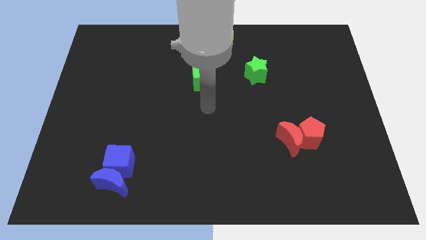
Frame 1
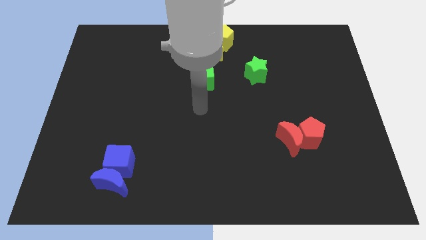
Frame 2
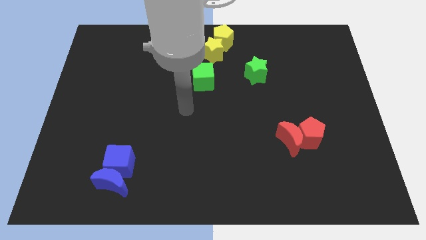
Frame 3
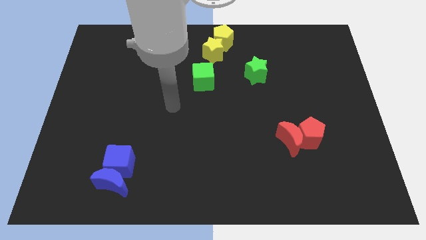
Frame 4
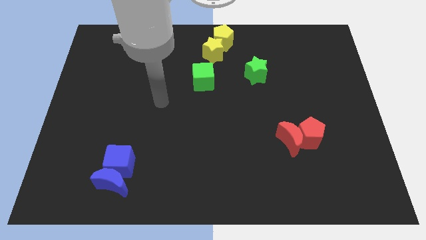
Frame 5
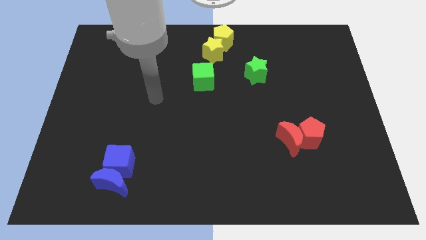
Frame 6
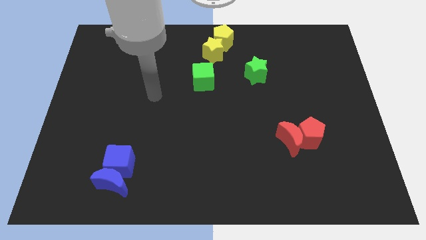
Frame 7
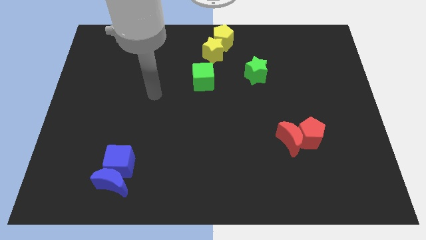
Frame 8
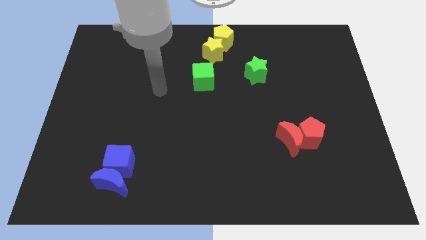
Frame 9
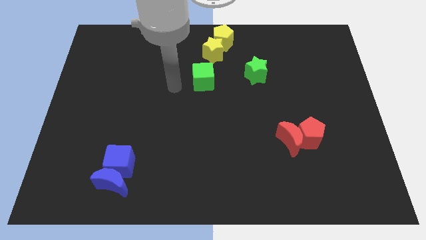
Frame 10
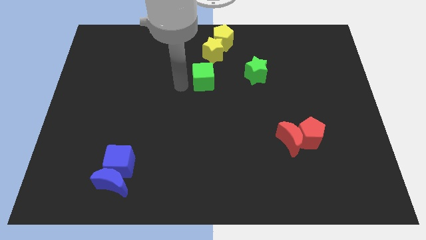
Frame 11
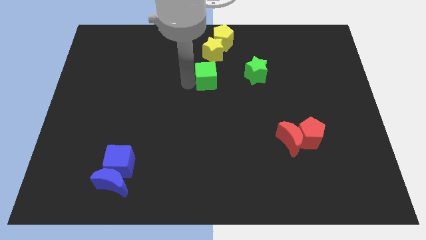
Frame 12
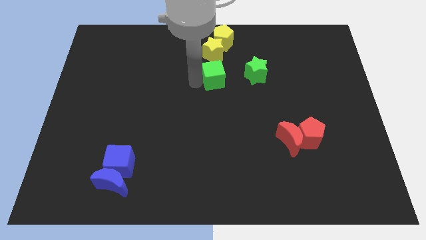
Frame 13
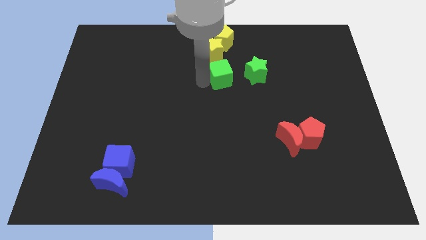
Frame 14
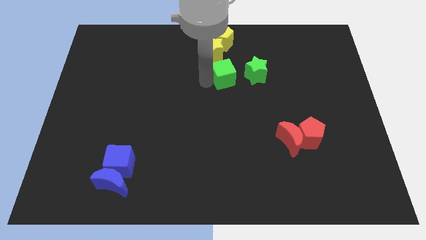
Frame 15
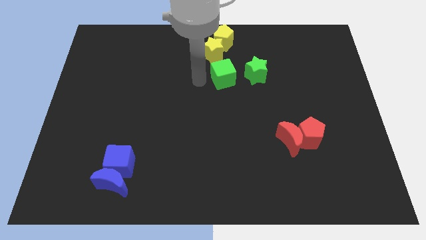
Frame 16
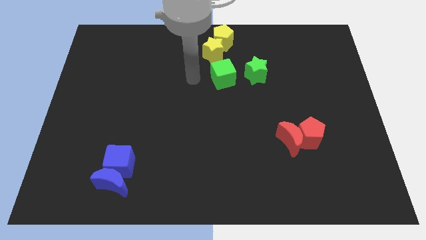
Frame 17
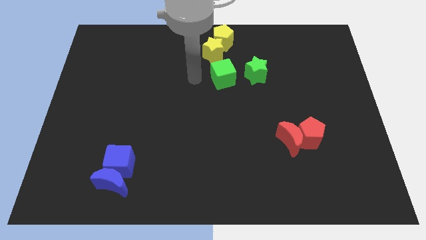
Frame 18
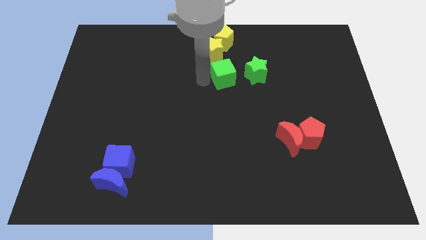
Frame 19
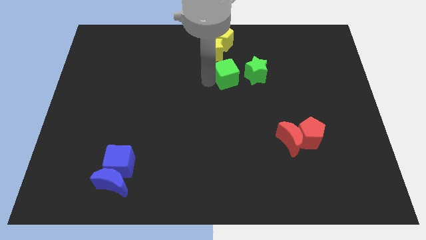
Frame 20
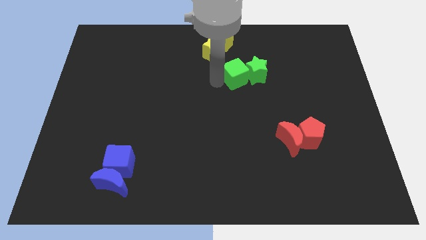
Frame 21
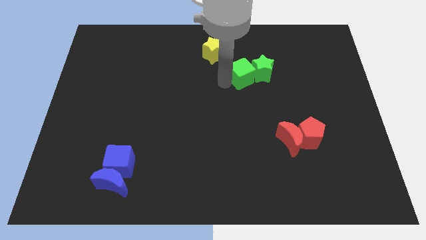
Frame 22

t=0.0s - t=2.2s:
push the green cube into green star

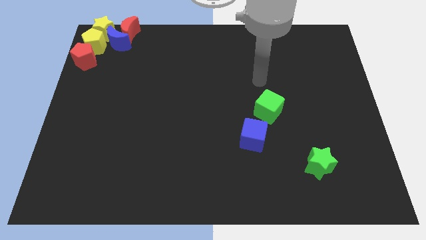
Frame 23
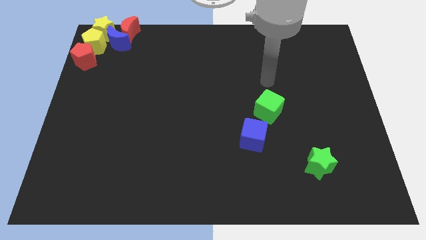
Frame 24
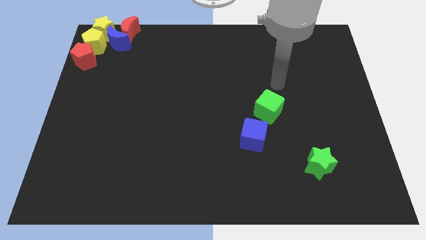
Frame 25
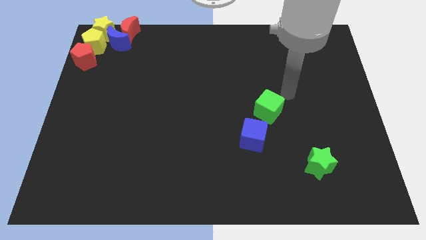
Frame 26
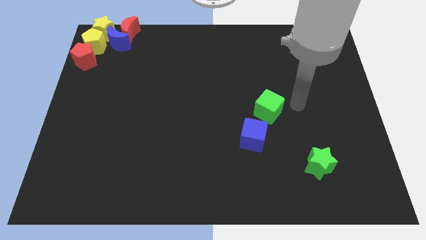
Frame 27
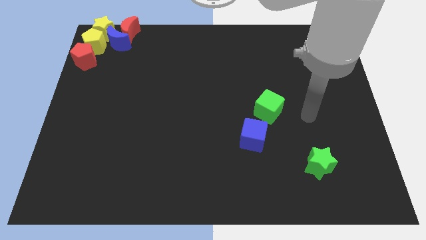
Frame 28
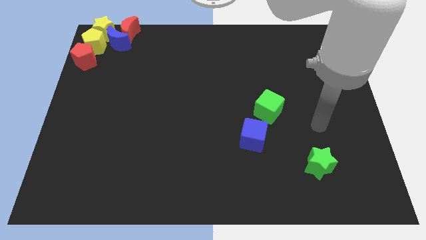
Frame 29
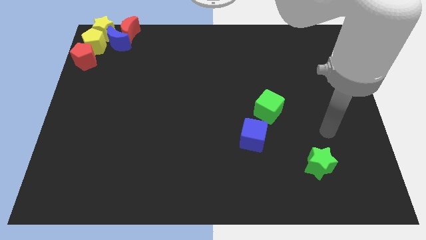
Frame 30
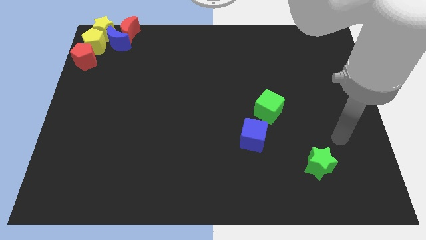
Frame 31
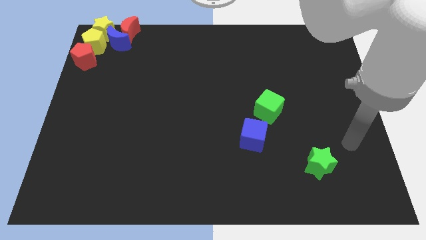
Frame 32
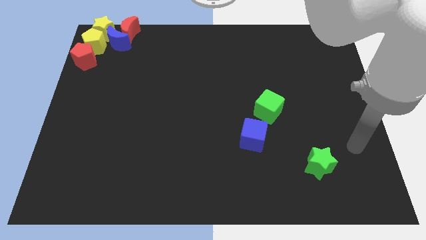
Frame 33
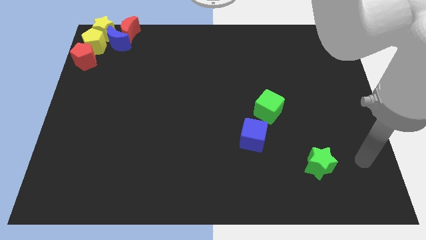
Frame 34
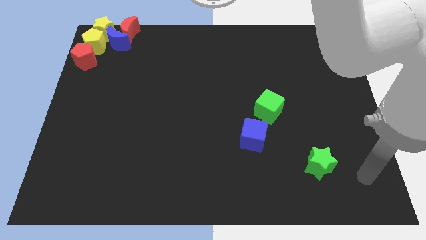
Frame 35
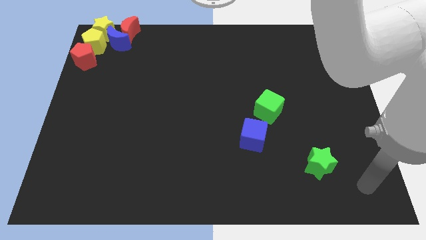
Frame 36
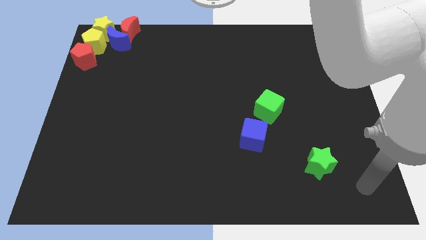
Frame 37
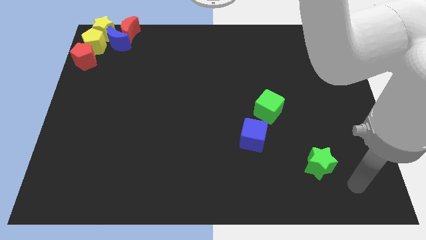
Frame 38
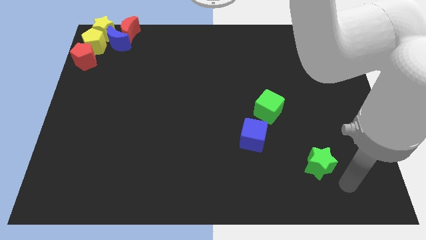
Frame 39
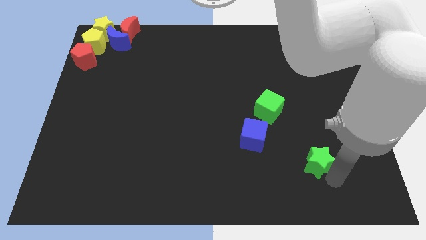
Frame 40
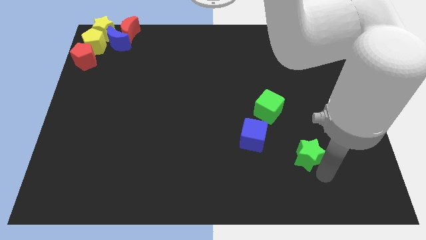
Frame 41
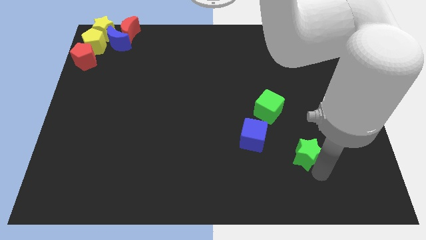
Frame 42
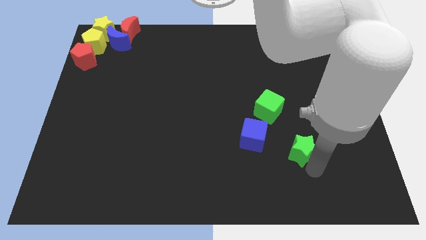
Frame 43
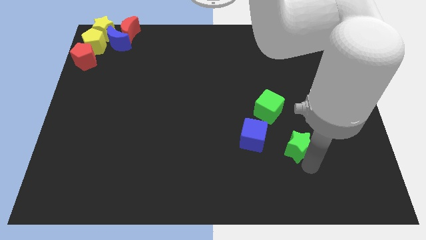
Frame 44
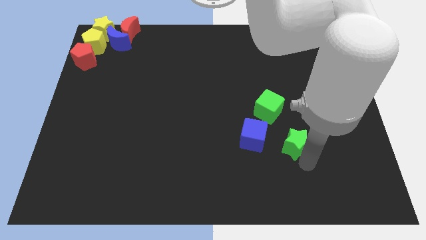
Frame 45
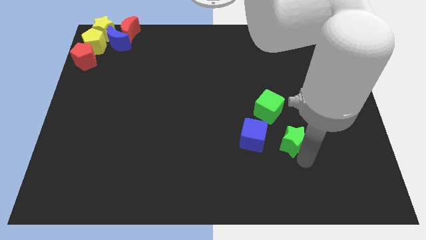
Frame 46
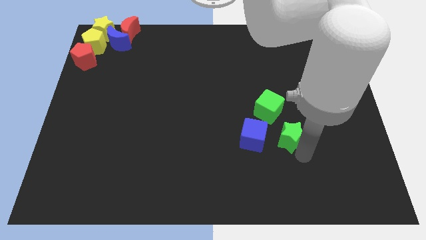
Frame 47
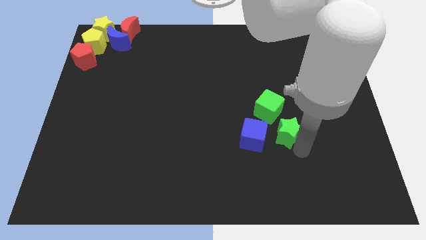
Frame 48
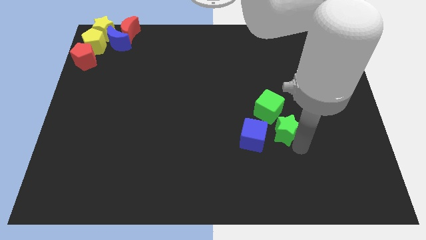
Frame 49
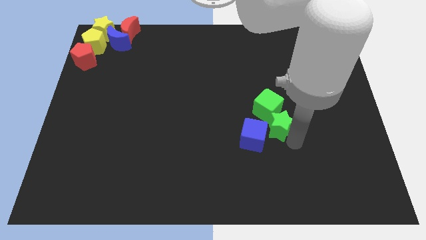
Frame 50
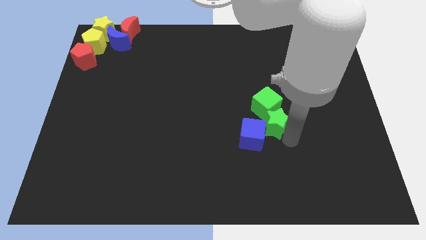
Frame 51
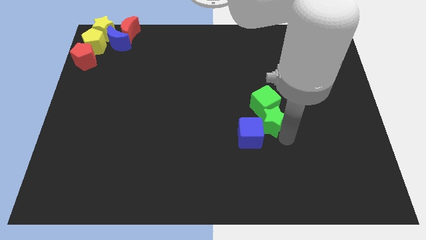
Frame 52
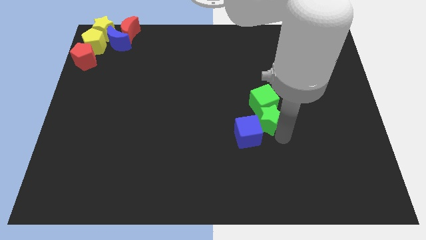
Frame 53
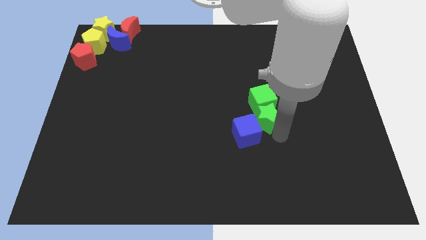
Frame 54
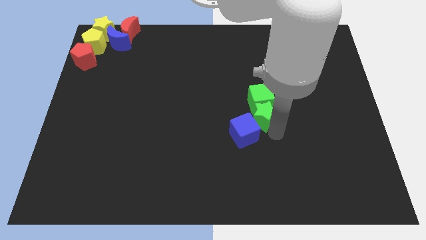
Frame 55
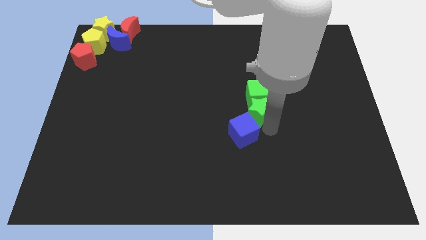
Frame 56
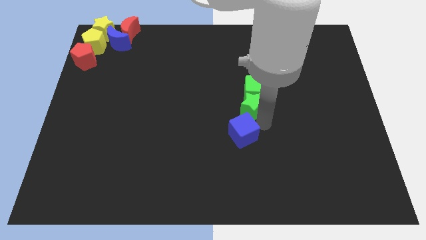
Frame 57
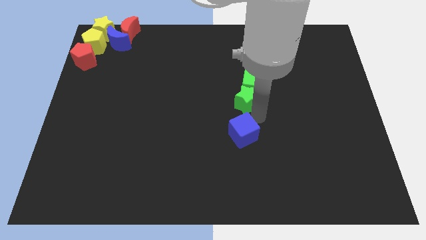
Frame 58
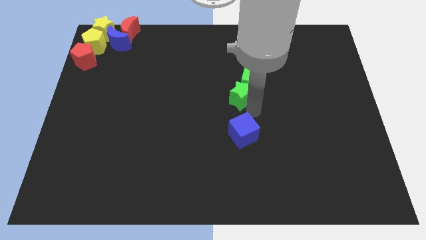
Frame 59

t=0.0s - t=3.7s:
place the green star in between green cube and blue cube

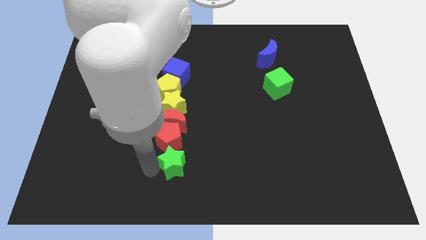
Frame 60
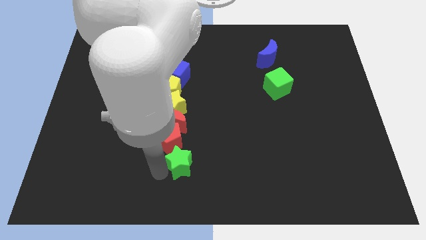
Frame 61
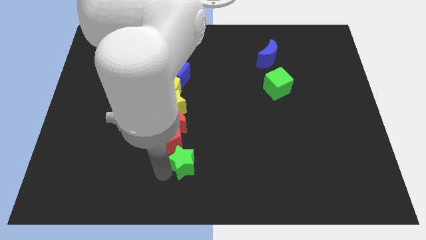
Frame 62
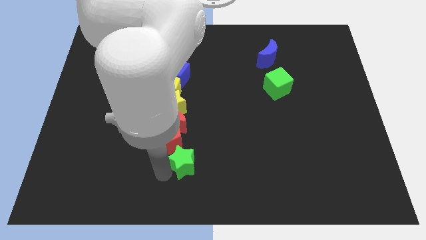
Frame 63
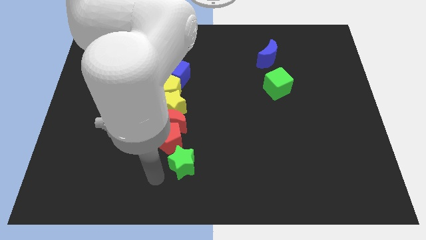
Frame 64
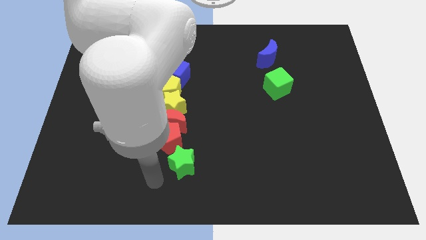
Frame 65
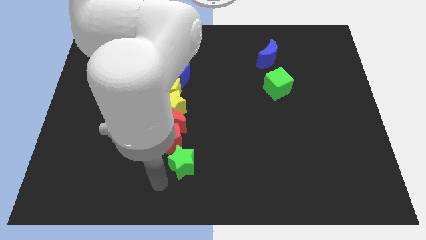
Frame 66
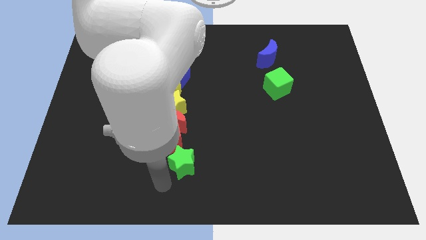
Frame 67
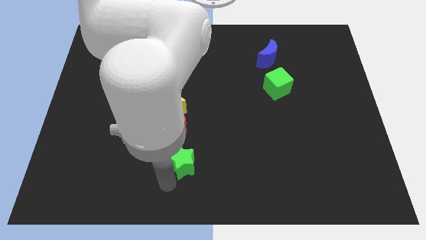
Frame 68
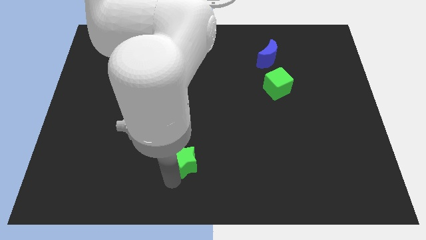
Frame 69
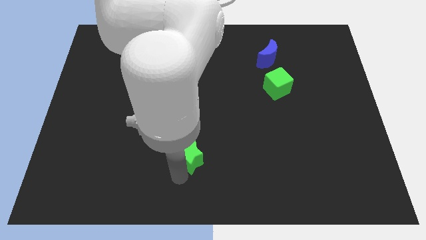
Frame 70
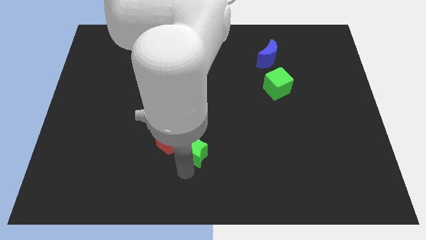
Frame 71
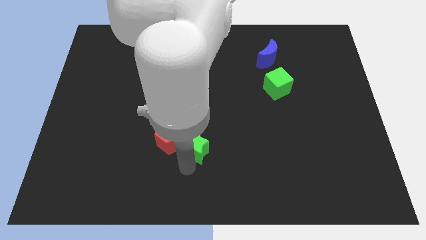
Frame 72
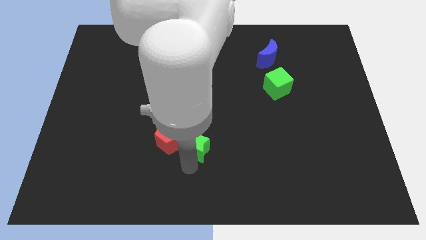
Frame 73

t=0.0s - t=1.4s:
push green star slightly to the right

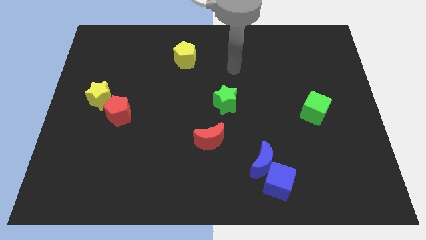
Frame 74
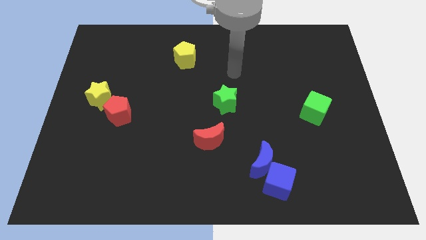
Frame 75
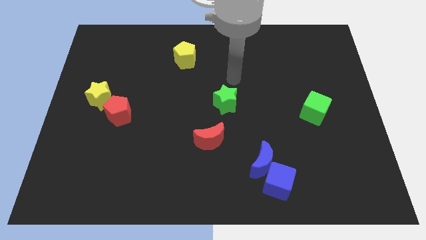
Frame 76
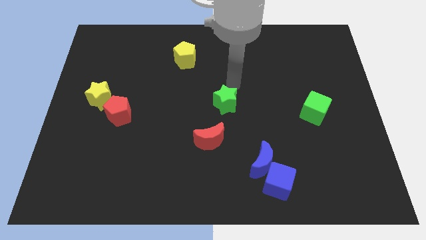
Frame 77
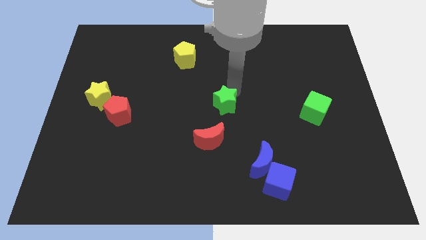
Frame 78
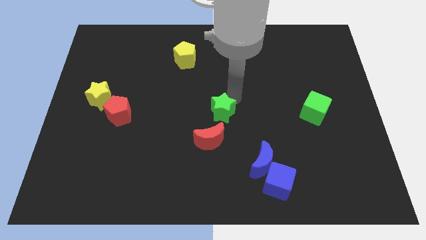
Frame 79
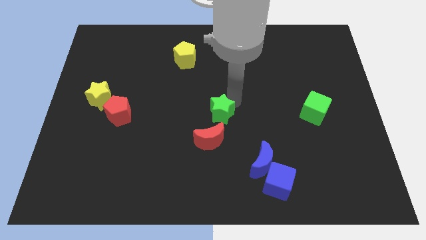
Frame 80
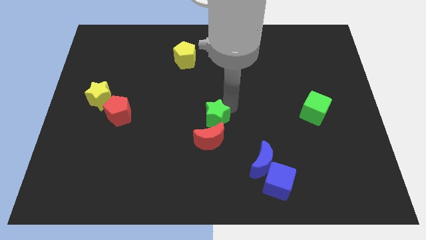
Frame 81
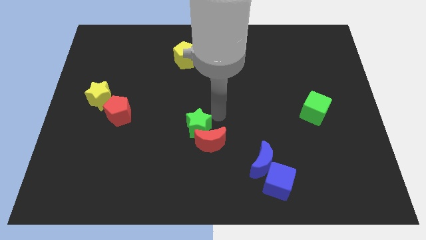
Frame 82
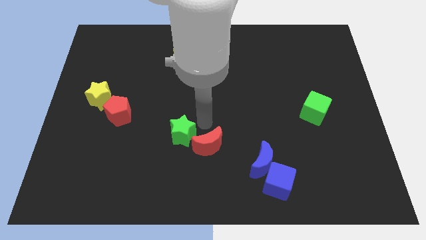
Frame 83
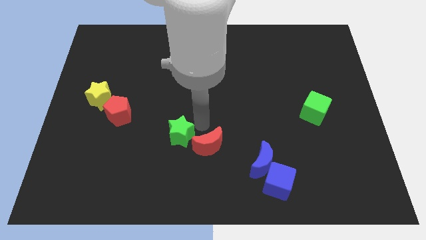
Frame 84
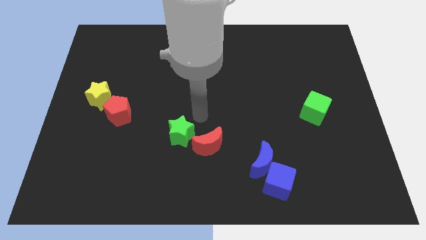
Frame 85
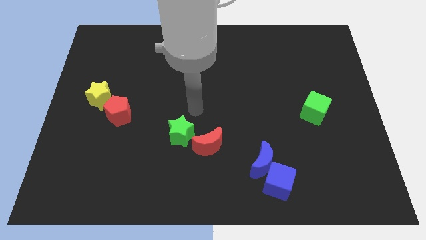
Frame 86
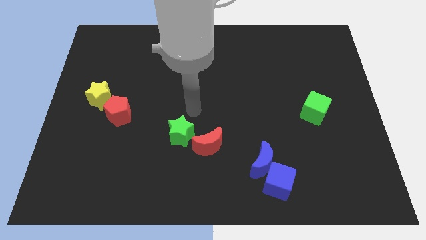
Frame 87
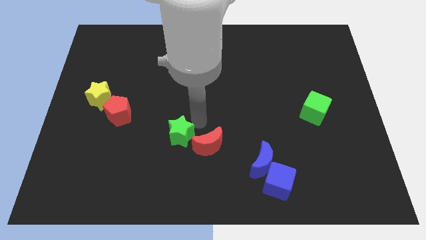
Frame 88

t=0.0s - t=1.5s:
push the green star into the red crescent

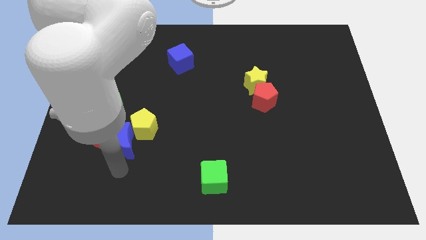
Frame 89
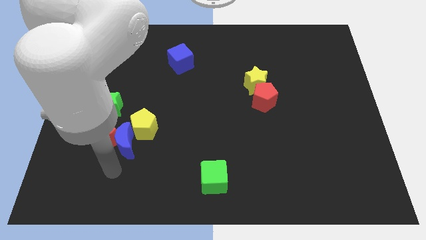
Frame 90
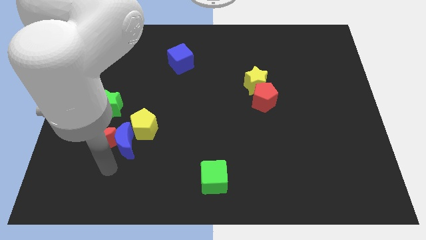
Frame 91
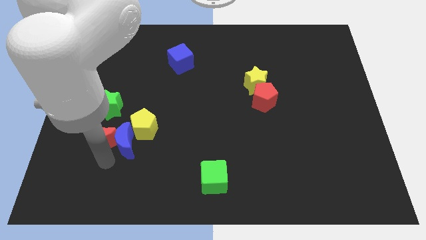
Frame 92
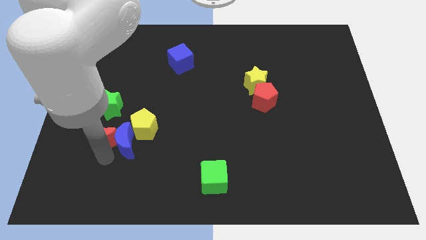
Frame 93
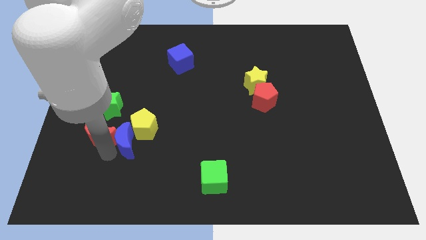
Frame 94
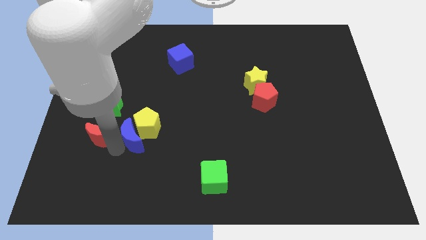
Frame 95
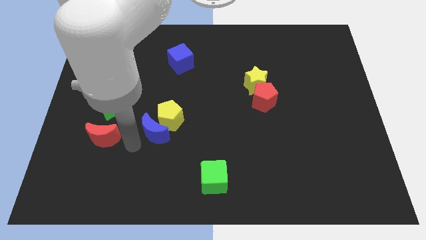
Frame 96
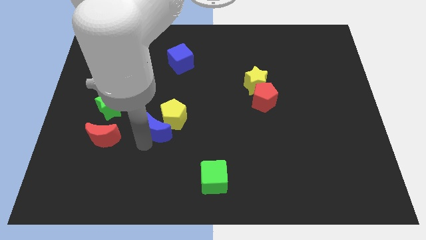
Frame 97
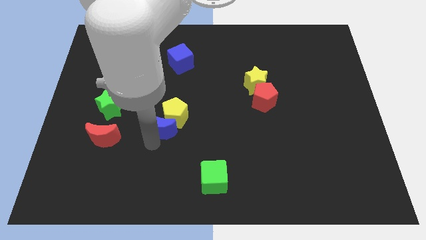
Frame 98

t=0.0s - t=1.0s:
place the blue crescent parallel to the red crescent
